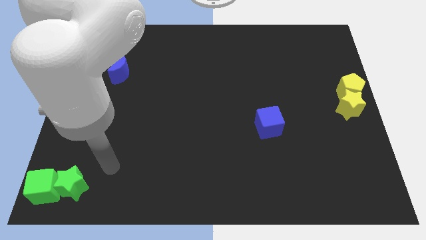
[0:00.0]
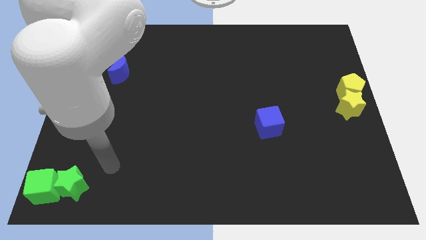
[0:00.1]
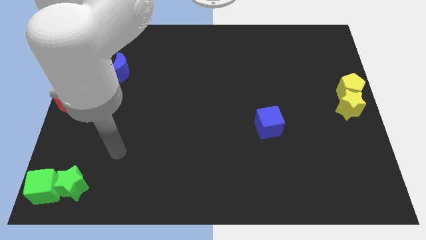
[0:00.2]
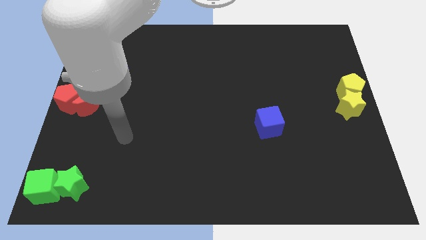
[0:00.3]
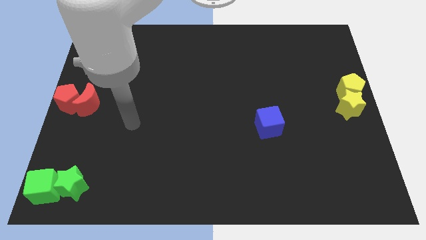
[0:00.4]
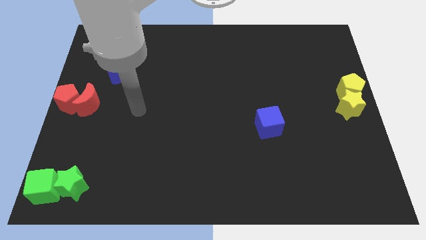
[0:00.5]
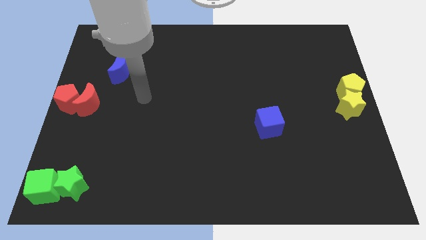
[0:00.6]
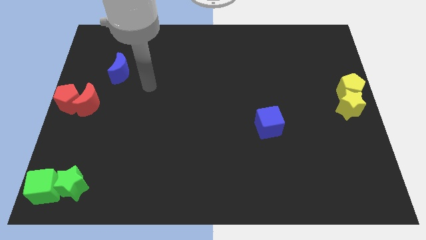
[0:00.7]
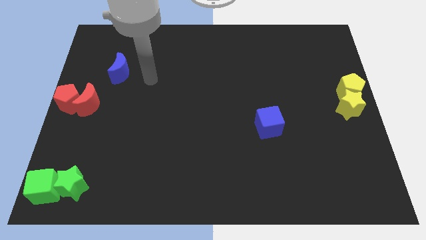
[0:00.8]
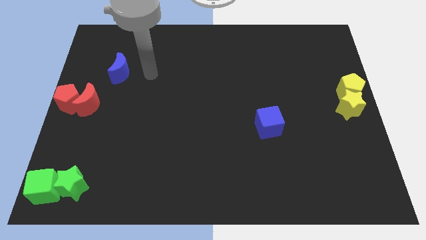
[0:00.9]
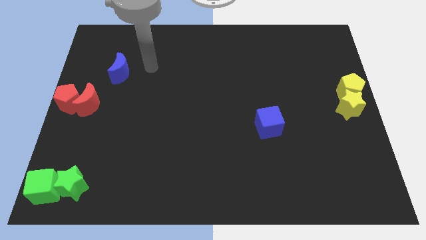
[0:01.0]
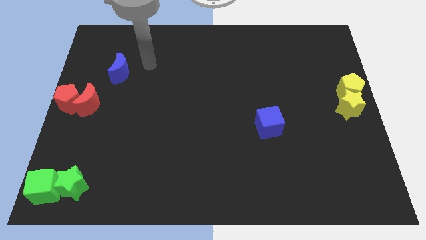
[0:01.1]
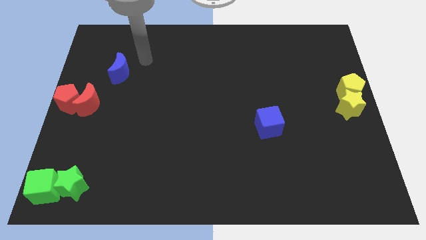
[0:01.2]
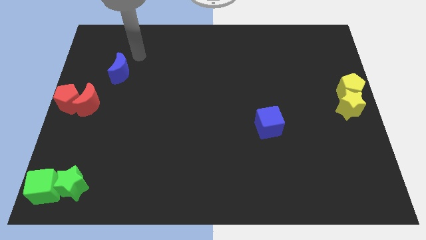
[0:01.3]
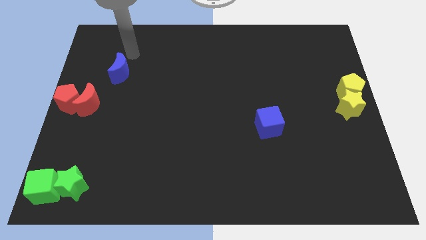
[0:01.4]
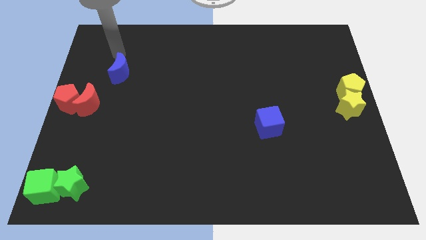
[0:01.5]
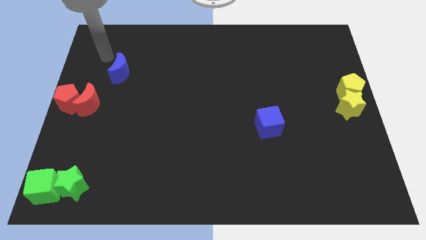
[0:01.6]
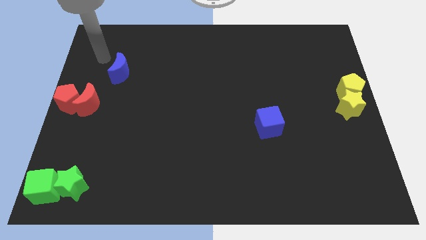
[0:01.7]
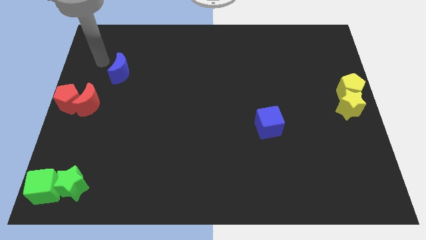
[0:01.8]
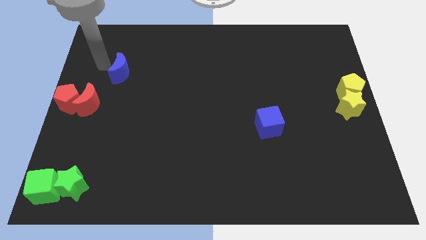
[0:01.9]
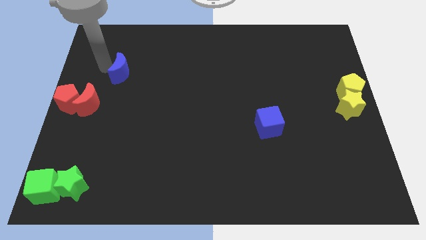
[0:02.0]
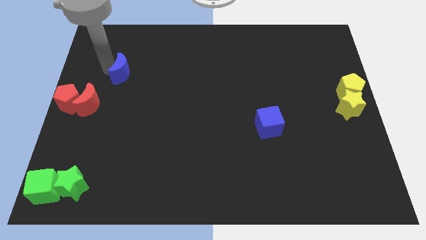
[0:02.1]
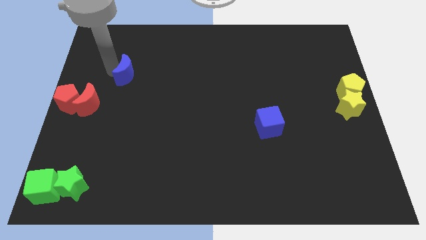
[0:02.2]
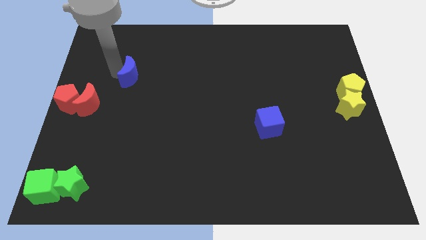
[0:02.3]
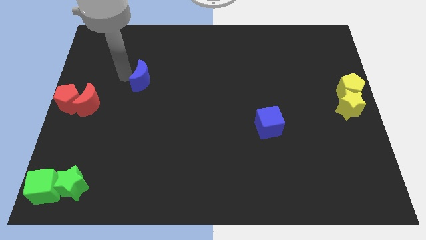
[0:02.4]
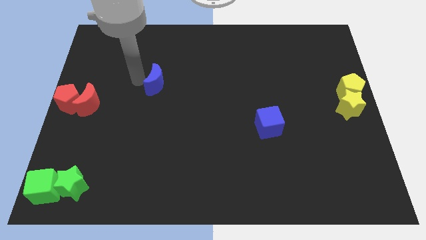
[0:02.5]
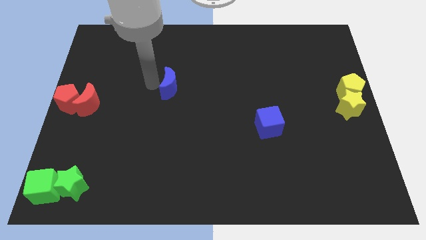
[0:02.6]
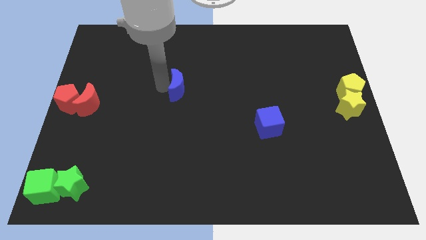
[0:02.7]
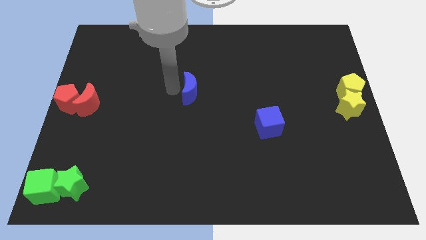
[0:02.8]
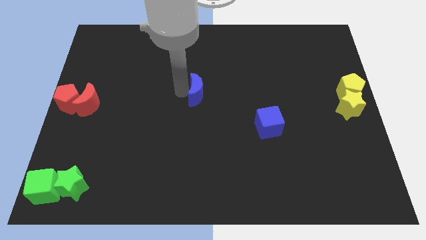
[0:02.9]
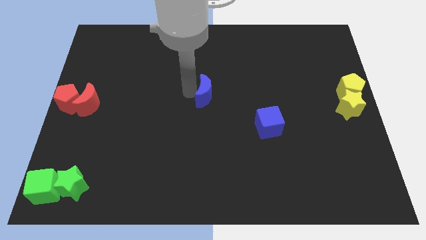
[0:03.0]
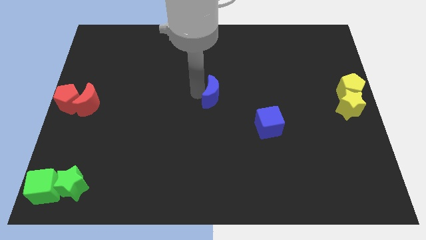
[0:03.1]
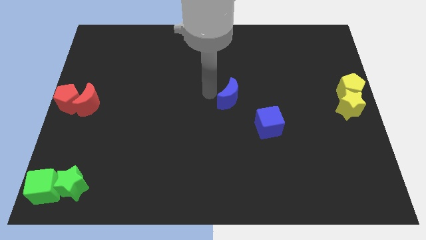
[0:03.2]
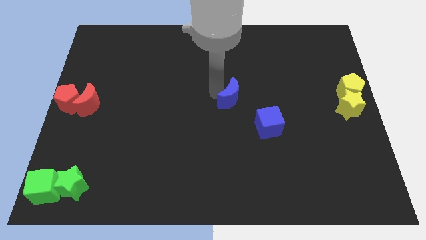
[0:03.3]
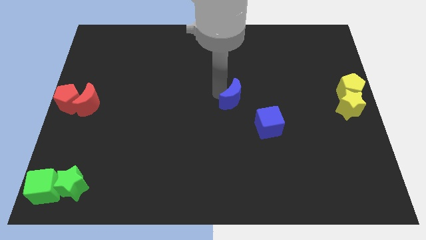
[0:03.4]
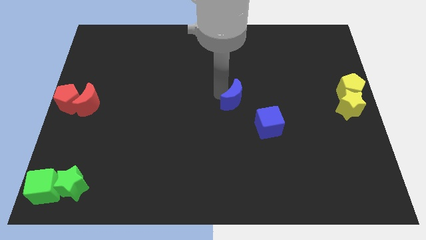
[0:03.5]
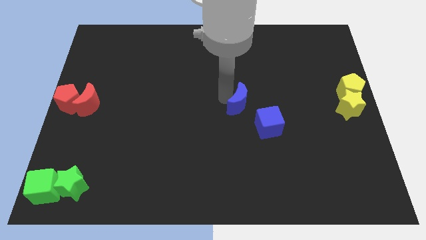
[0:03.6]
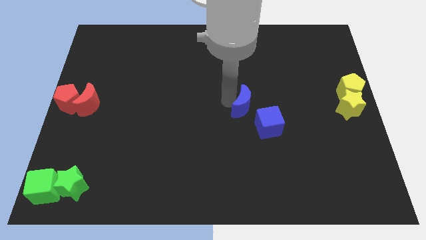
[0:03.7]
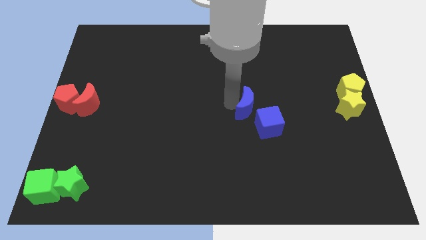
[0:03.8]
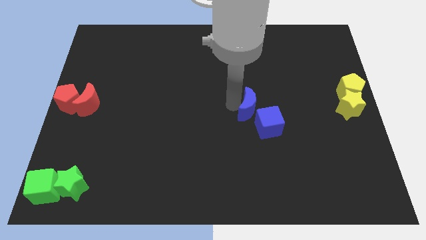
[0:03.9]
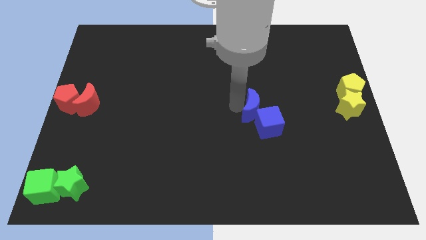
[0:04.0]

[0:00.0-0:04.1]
place the blue crescent close to blue cube

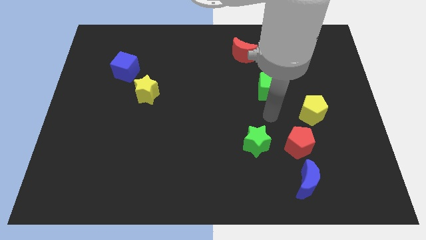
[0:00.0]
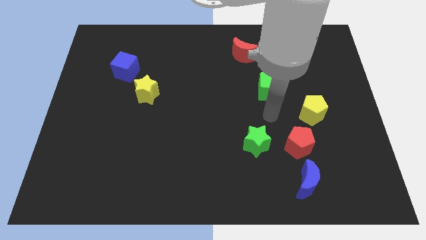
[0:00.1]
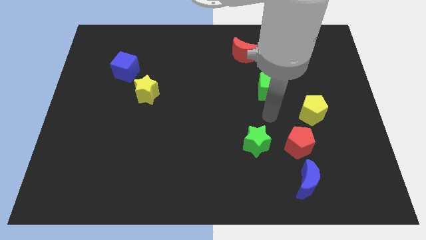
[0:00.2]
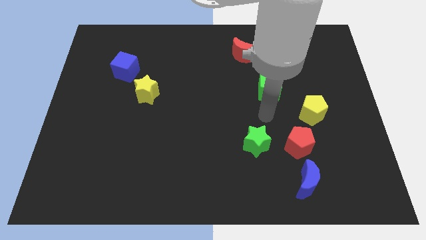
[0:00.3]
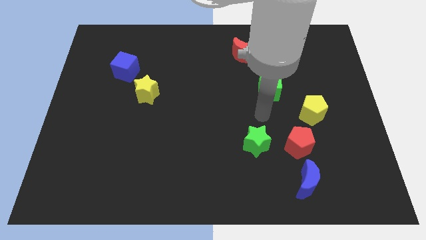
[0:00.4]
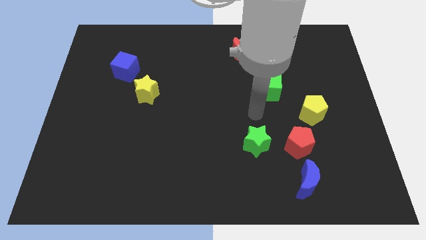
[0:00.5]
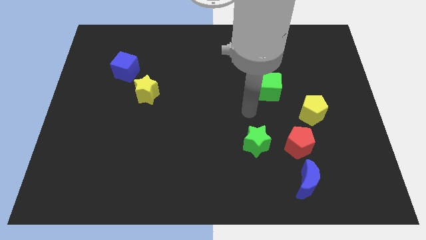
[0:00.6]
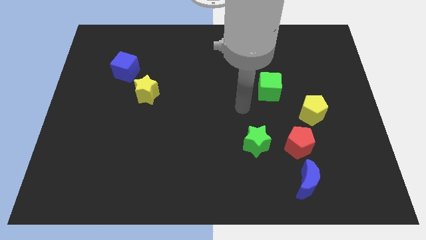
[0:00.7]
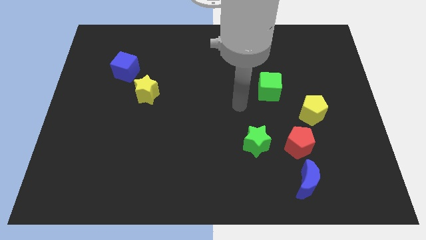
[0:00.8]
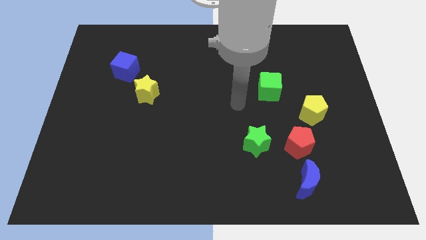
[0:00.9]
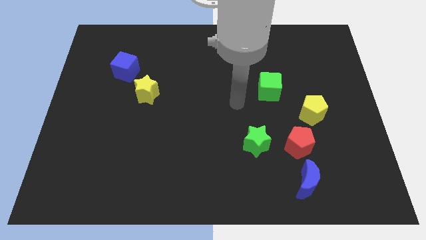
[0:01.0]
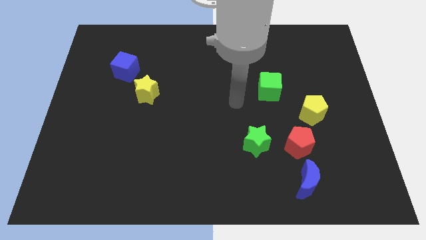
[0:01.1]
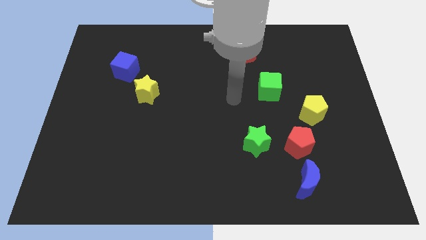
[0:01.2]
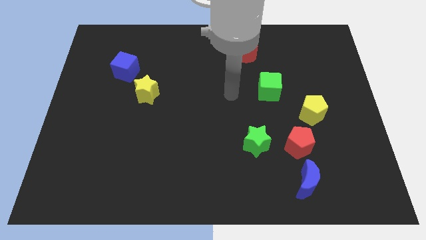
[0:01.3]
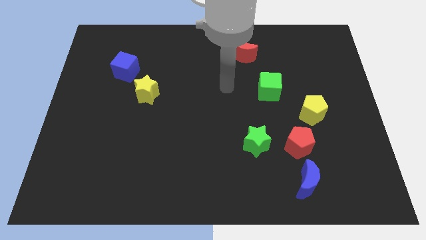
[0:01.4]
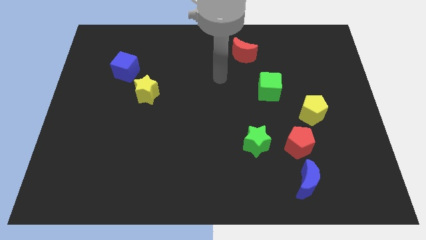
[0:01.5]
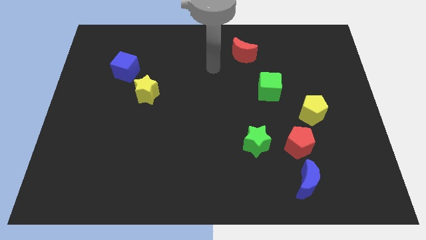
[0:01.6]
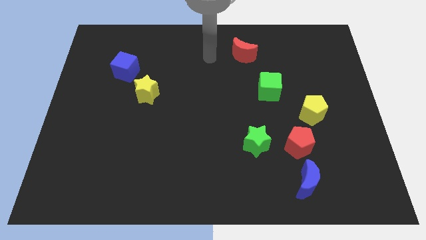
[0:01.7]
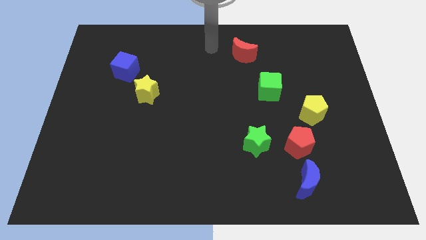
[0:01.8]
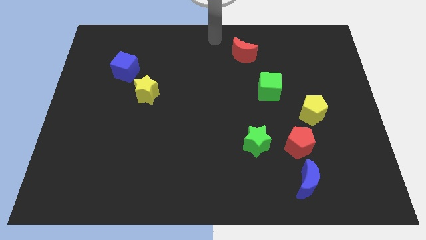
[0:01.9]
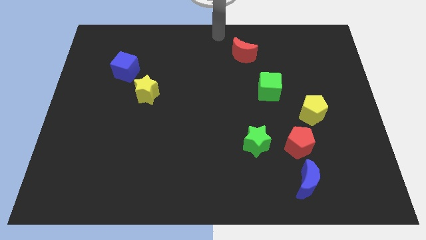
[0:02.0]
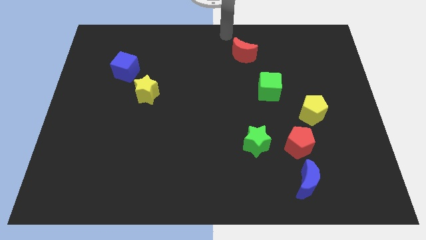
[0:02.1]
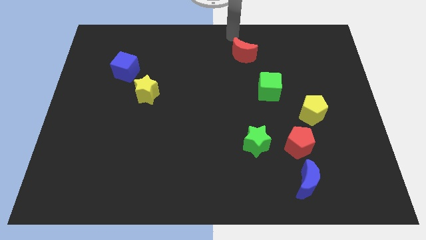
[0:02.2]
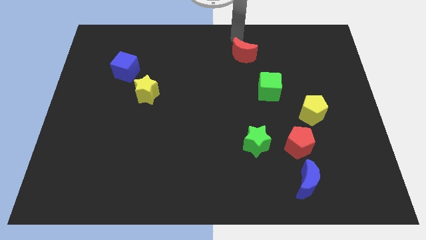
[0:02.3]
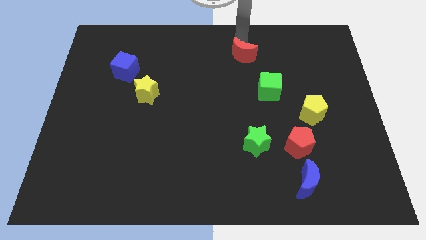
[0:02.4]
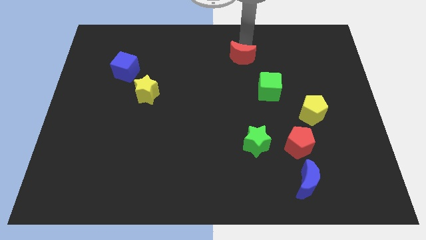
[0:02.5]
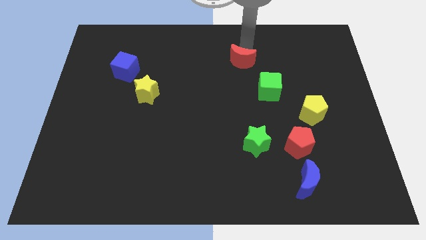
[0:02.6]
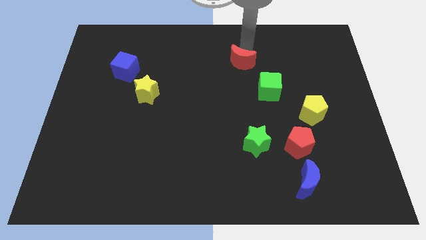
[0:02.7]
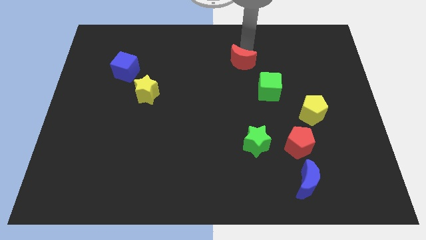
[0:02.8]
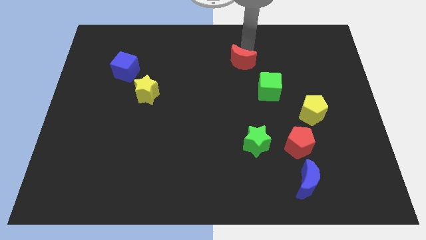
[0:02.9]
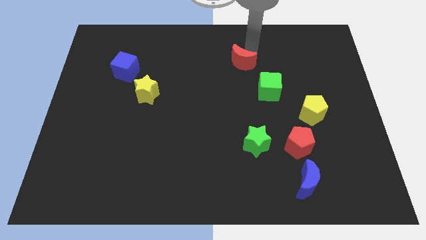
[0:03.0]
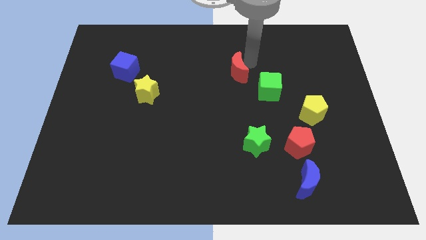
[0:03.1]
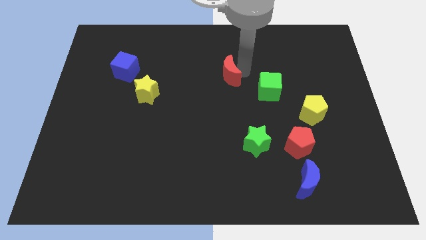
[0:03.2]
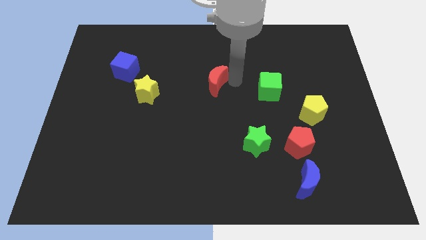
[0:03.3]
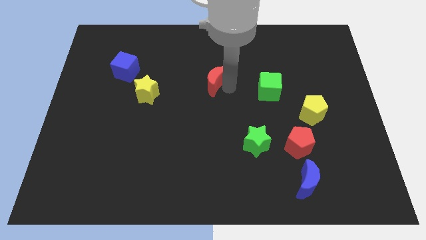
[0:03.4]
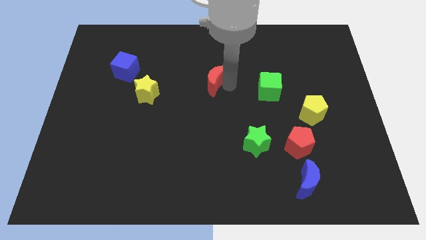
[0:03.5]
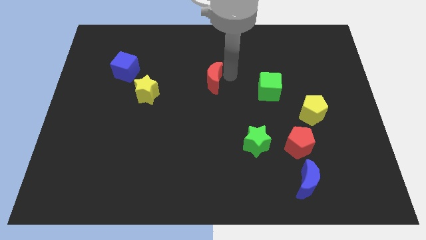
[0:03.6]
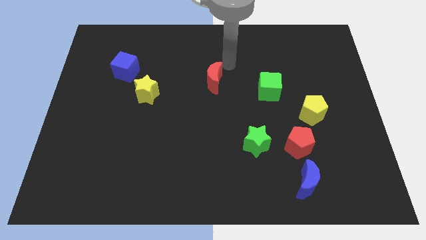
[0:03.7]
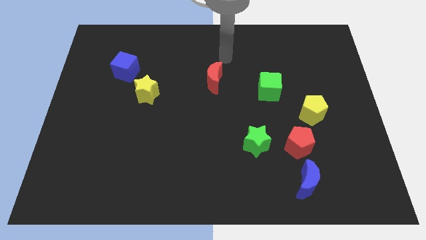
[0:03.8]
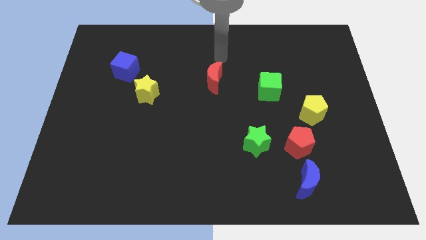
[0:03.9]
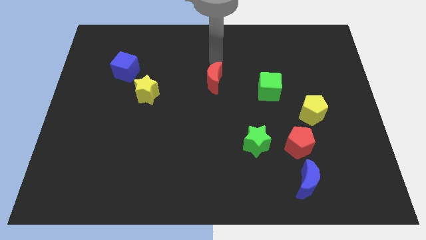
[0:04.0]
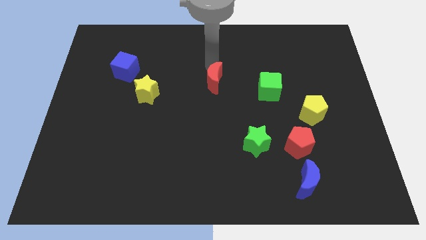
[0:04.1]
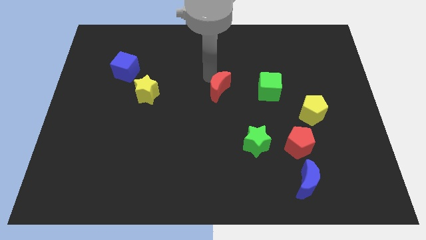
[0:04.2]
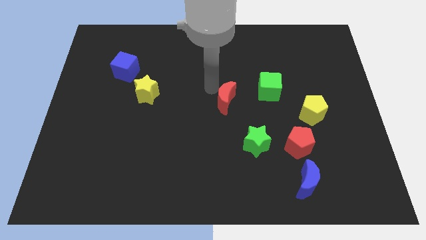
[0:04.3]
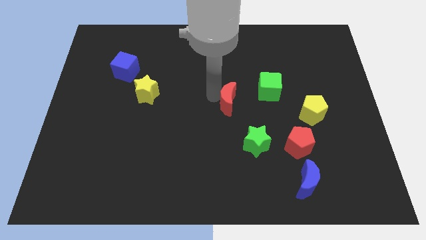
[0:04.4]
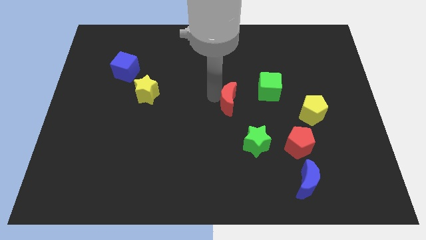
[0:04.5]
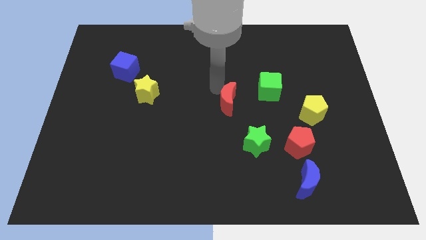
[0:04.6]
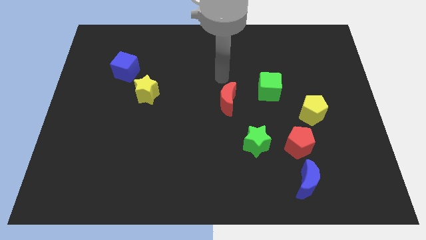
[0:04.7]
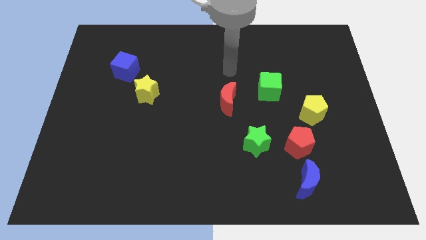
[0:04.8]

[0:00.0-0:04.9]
move the red crescent to the center of the board

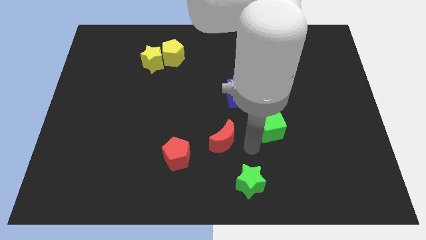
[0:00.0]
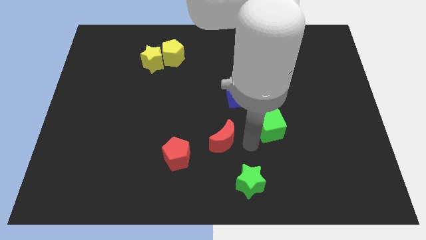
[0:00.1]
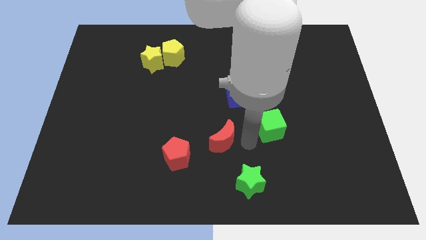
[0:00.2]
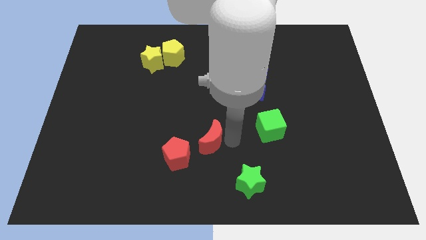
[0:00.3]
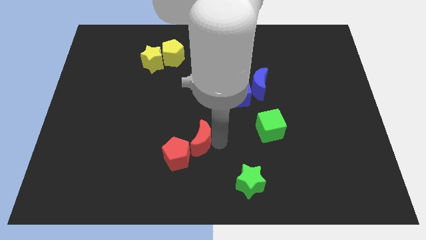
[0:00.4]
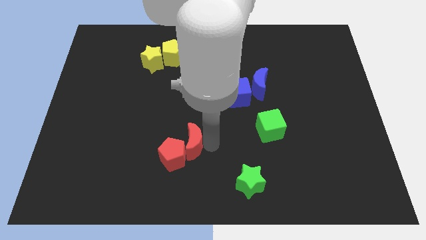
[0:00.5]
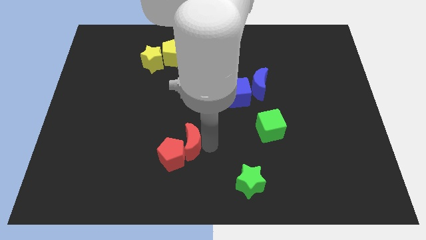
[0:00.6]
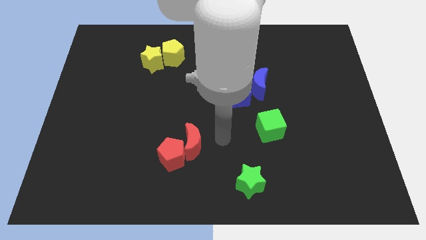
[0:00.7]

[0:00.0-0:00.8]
push the red crescent into the red pentagon
